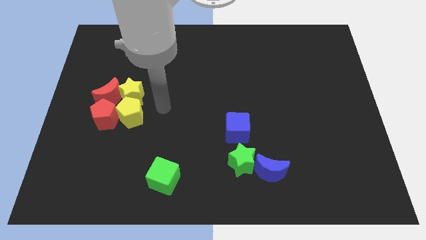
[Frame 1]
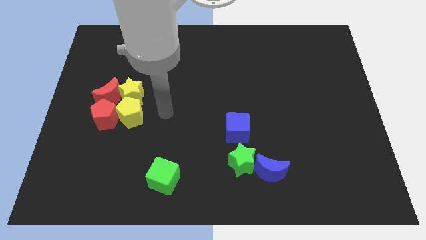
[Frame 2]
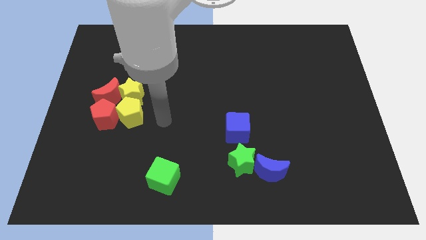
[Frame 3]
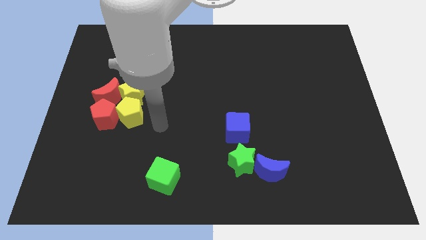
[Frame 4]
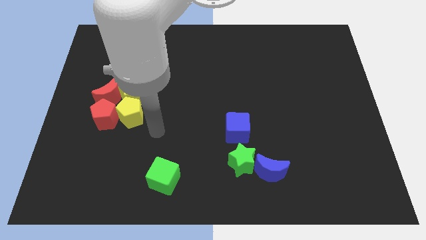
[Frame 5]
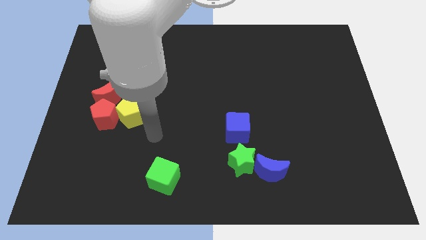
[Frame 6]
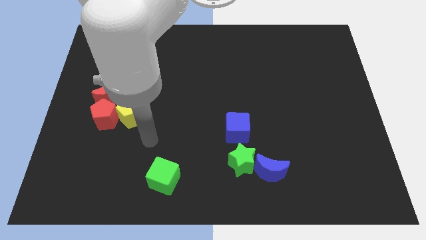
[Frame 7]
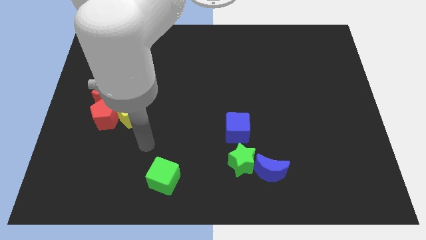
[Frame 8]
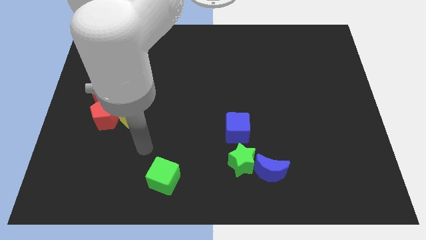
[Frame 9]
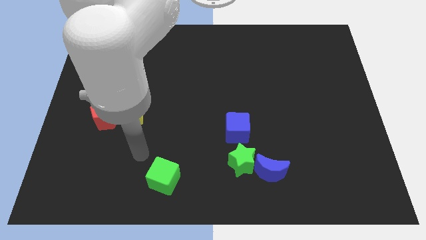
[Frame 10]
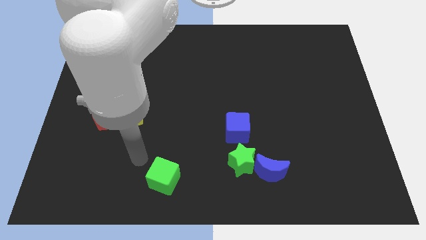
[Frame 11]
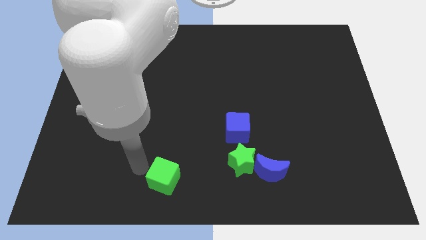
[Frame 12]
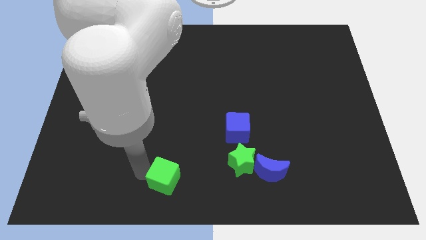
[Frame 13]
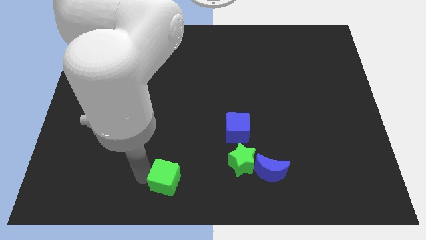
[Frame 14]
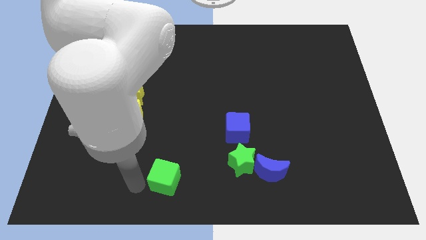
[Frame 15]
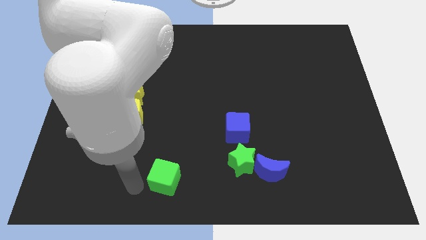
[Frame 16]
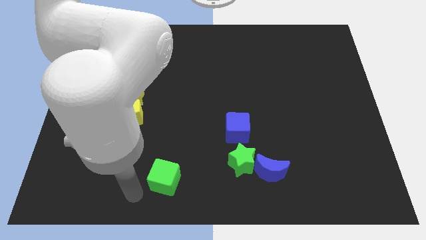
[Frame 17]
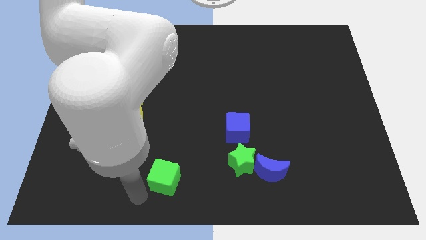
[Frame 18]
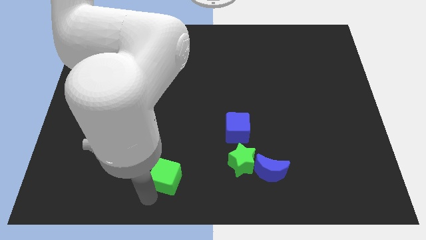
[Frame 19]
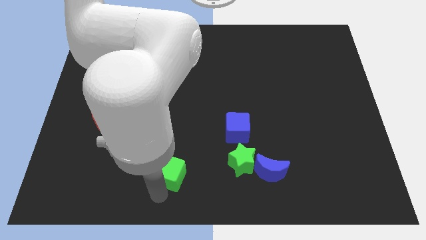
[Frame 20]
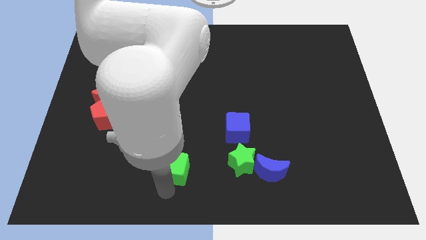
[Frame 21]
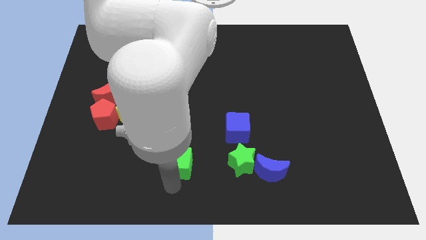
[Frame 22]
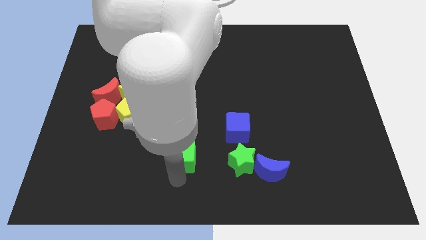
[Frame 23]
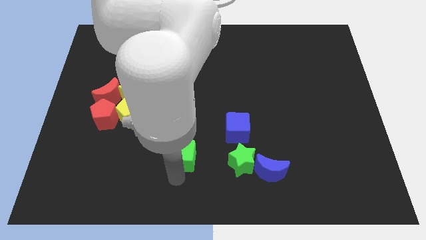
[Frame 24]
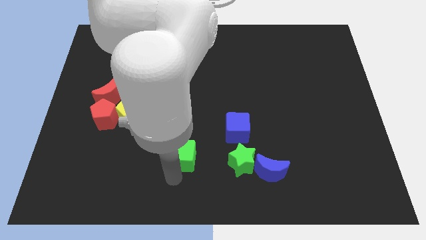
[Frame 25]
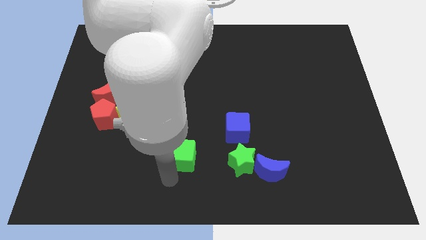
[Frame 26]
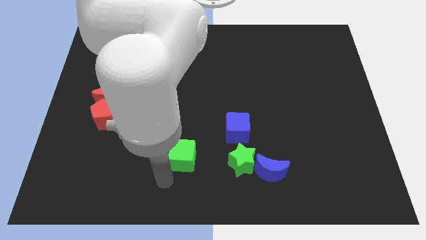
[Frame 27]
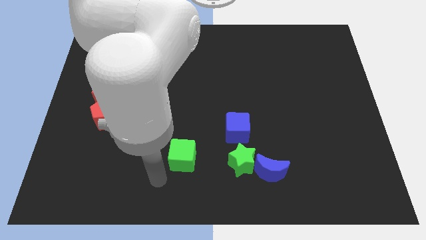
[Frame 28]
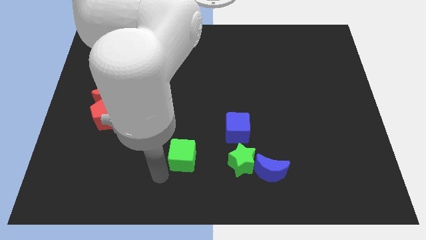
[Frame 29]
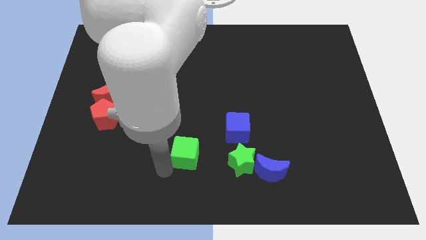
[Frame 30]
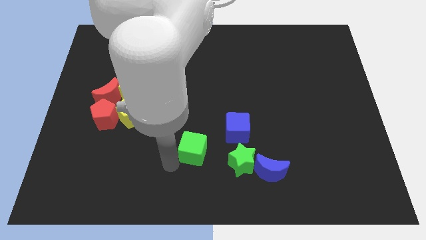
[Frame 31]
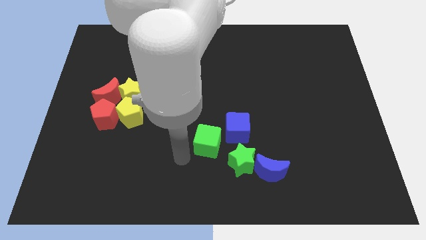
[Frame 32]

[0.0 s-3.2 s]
slide green cube to left of green star

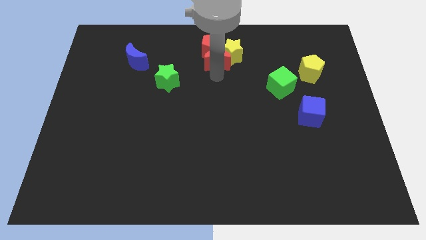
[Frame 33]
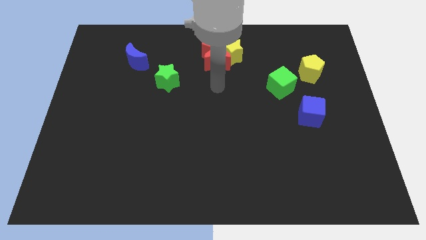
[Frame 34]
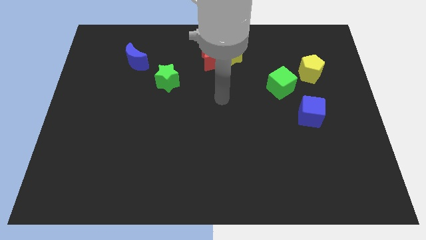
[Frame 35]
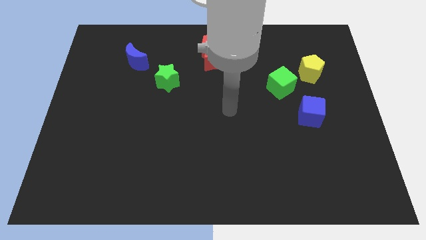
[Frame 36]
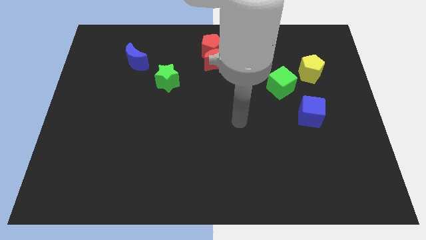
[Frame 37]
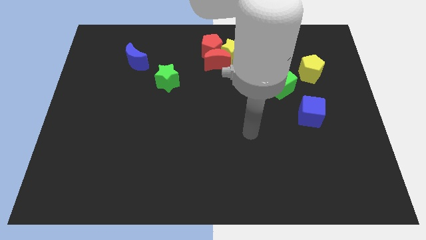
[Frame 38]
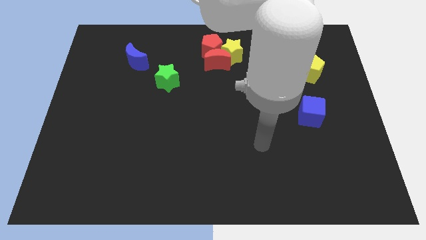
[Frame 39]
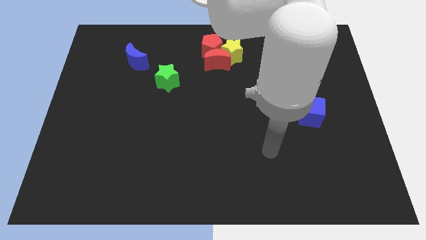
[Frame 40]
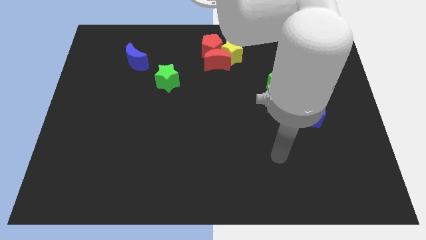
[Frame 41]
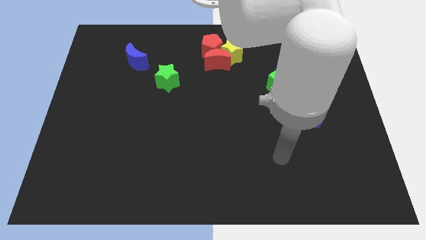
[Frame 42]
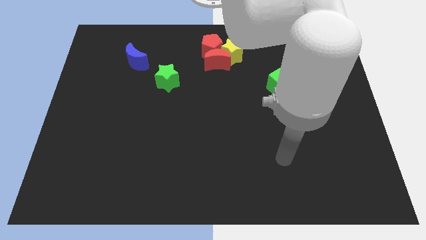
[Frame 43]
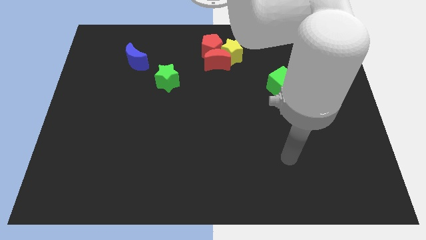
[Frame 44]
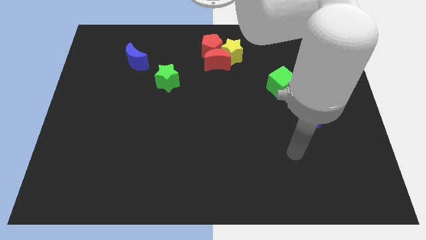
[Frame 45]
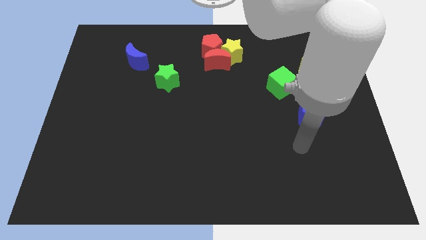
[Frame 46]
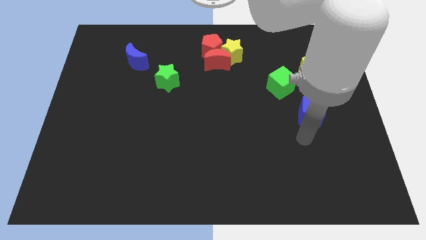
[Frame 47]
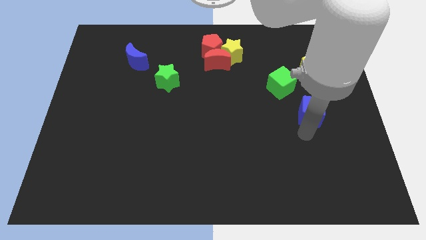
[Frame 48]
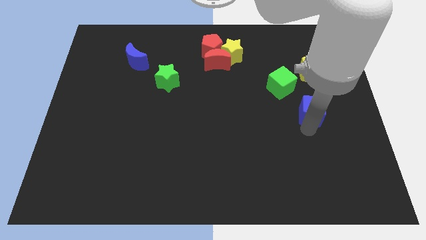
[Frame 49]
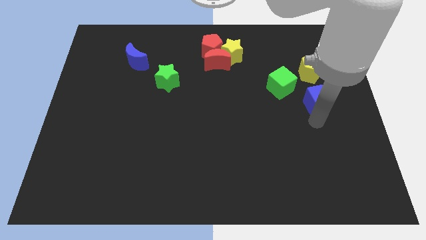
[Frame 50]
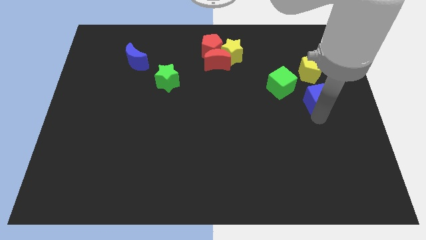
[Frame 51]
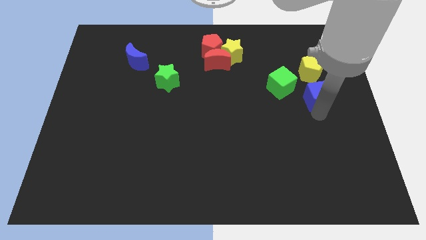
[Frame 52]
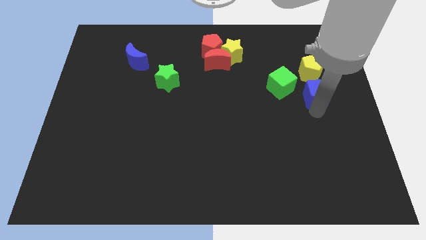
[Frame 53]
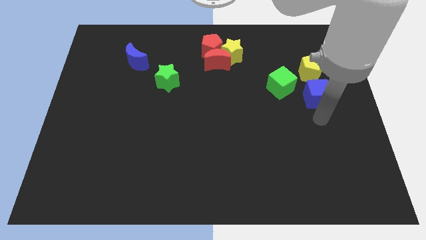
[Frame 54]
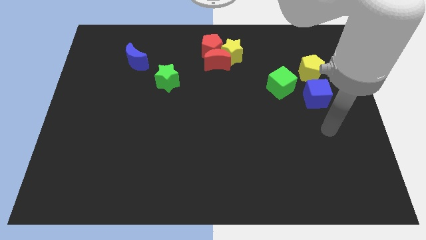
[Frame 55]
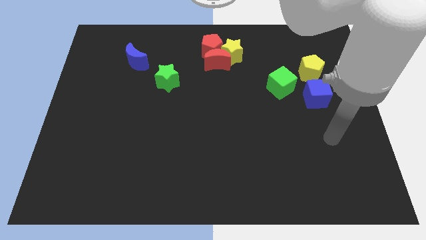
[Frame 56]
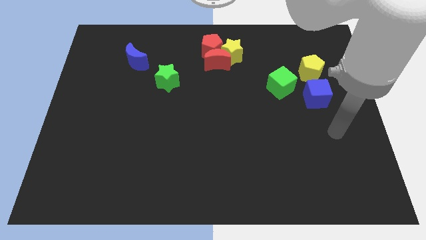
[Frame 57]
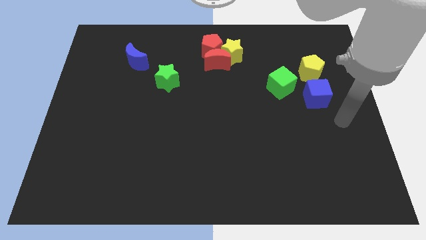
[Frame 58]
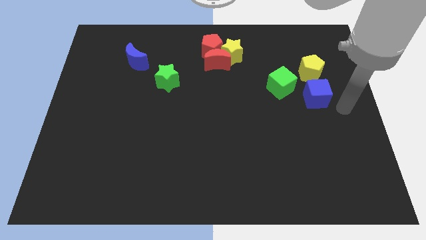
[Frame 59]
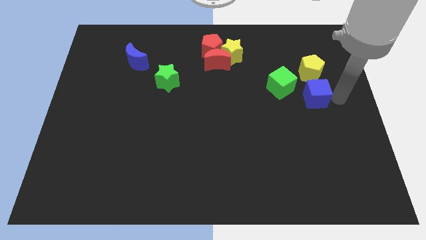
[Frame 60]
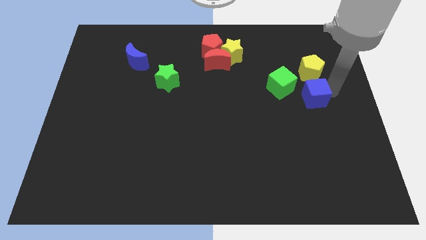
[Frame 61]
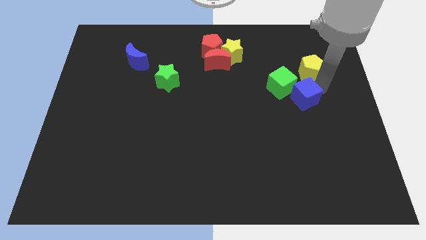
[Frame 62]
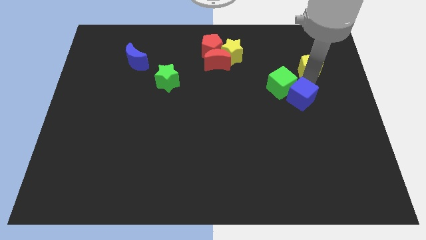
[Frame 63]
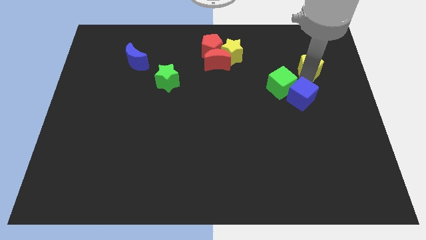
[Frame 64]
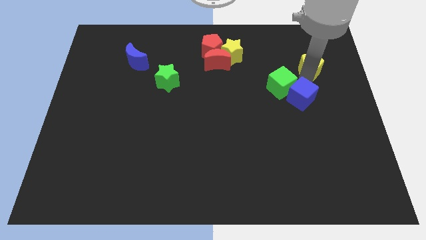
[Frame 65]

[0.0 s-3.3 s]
slide the blue cube into the green cube

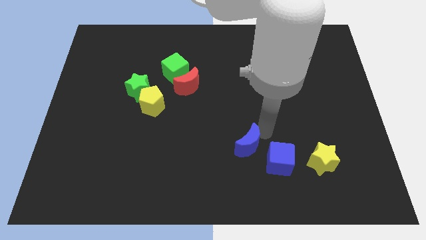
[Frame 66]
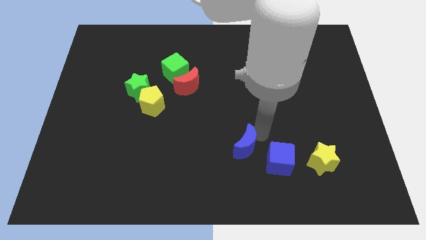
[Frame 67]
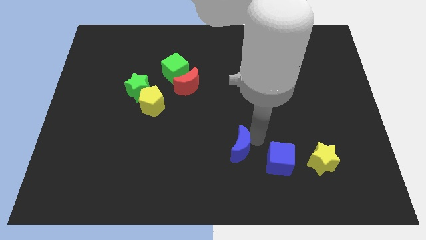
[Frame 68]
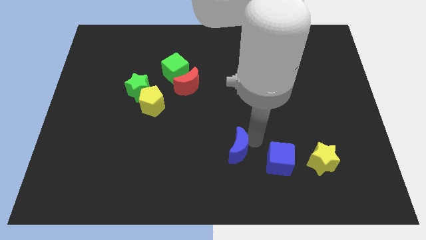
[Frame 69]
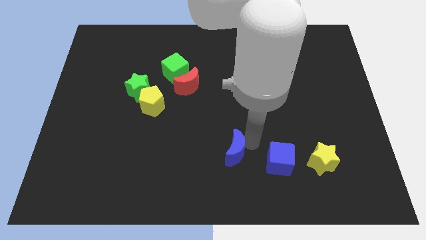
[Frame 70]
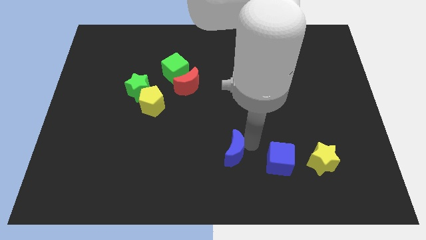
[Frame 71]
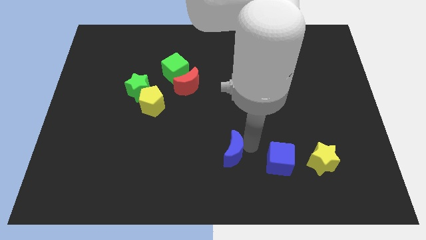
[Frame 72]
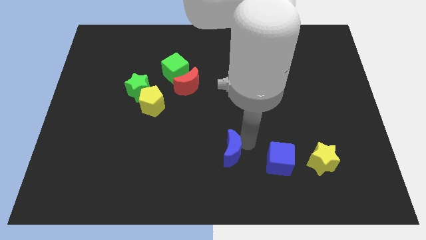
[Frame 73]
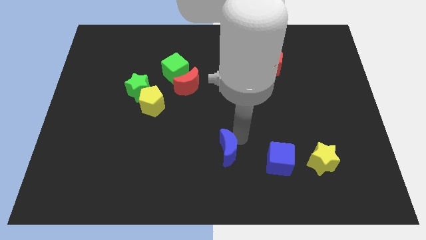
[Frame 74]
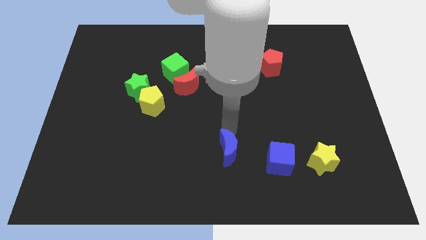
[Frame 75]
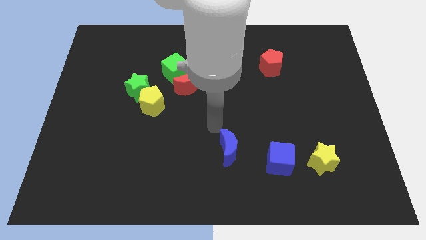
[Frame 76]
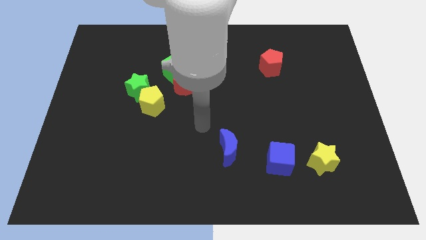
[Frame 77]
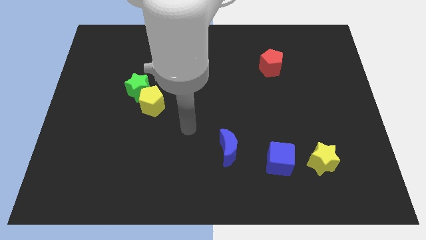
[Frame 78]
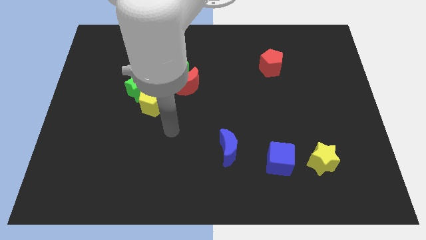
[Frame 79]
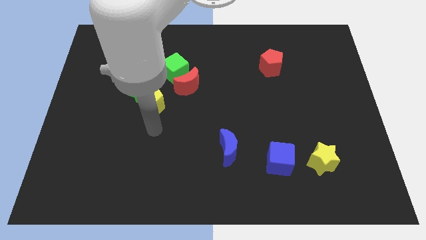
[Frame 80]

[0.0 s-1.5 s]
place blue crescent to the left of blue cube

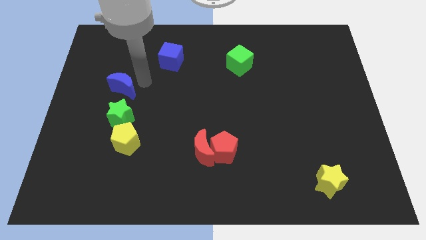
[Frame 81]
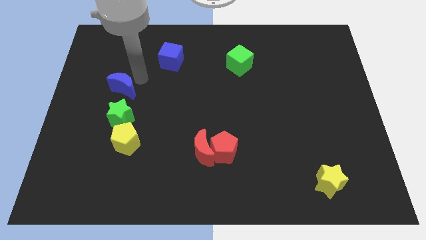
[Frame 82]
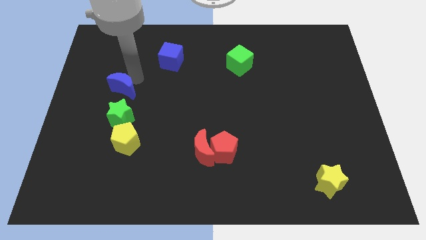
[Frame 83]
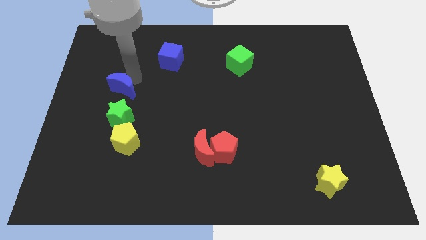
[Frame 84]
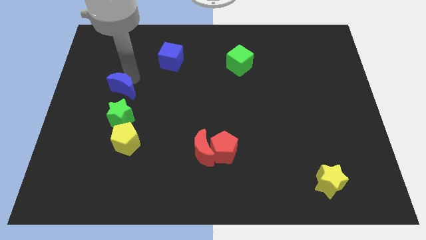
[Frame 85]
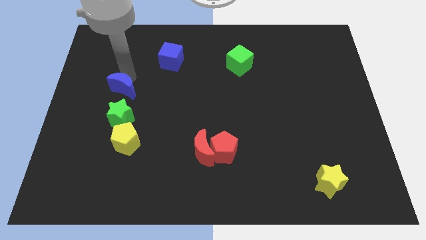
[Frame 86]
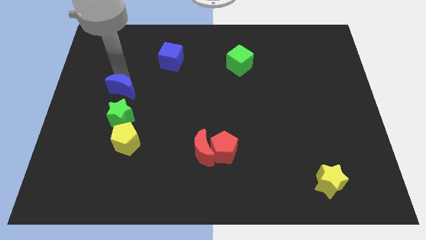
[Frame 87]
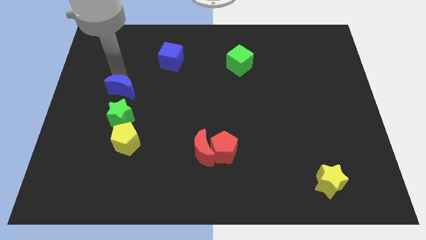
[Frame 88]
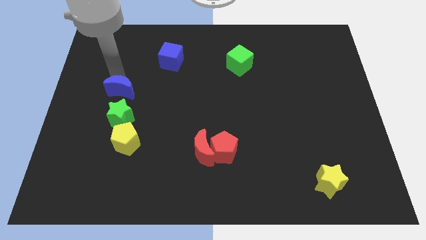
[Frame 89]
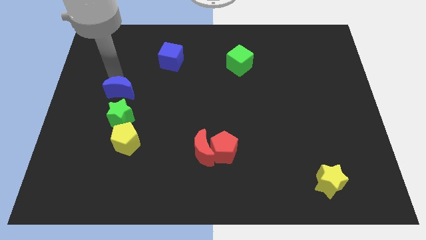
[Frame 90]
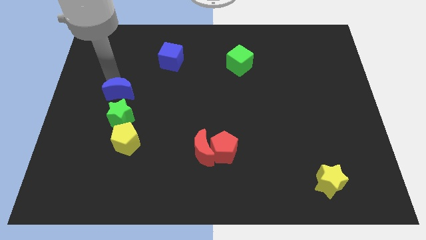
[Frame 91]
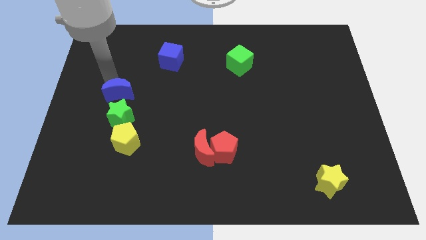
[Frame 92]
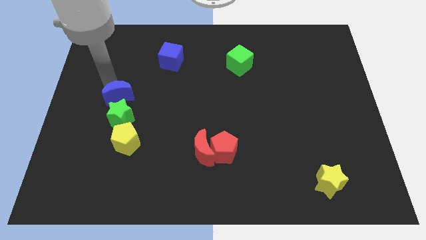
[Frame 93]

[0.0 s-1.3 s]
place the blue crescent on top of the green star
